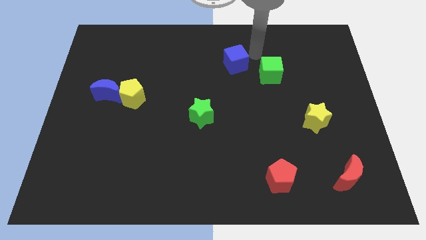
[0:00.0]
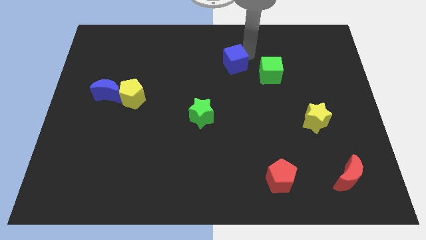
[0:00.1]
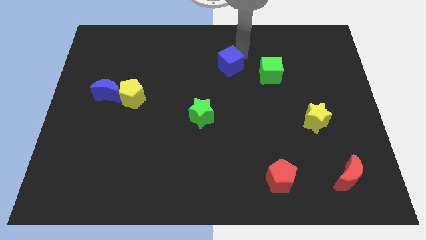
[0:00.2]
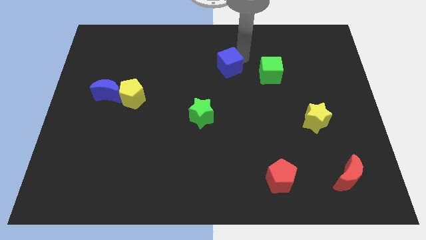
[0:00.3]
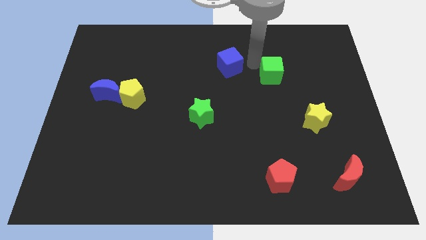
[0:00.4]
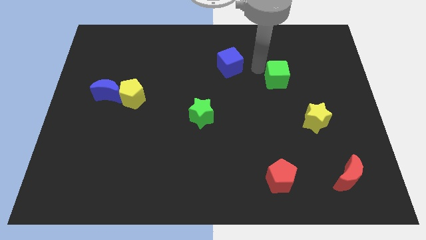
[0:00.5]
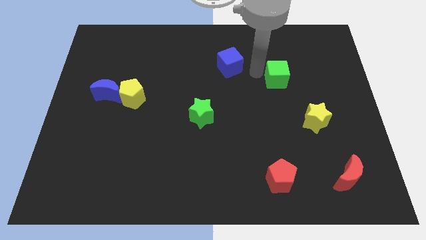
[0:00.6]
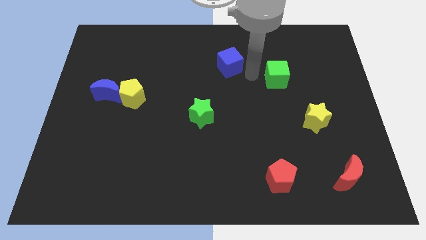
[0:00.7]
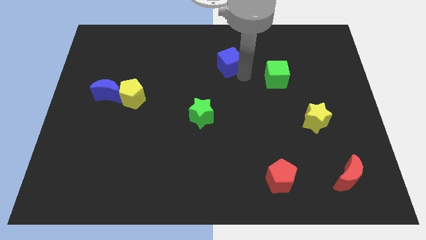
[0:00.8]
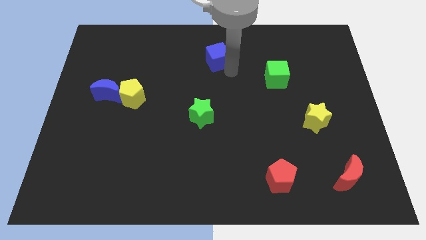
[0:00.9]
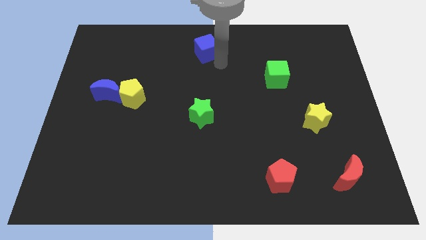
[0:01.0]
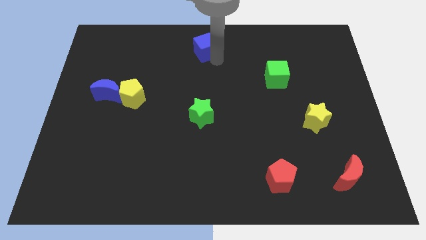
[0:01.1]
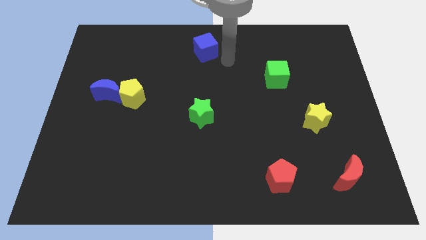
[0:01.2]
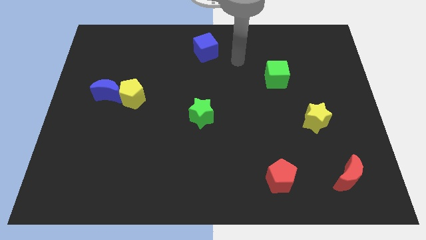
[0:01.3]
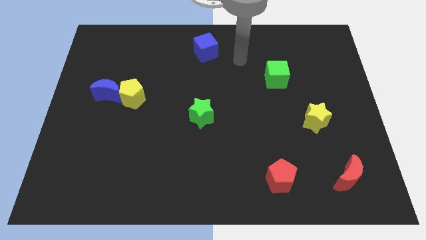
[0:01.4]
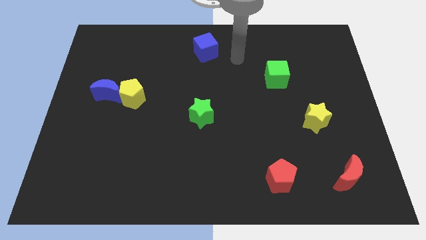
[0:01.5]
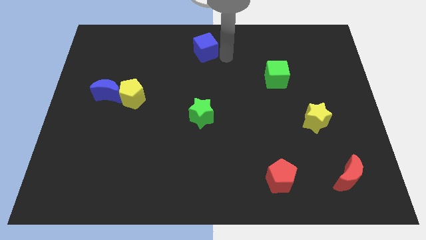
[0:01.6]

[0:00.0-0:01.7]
place the blue cube vertically above the green star

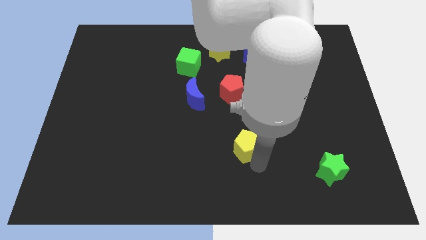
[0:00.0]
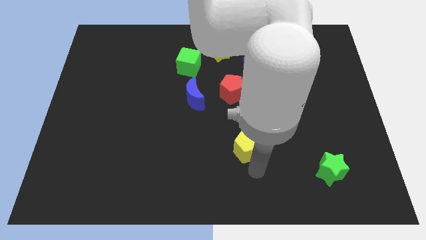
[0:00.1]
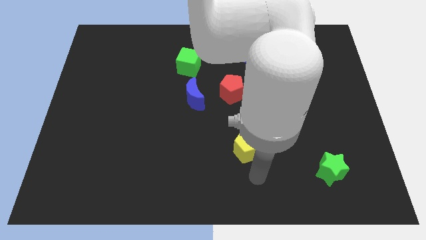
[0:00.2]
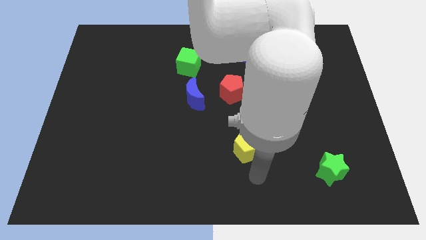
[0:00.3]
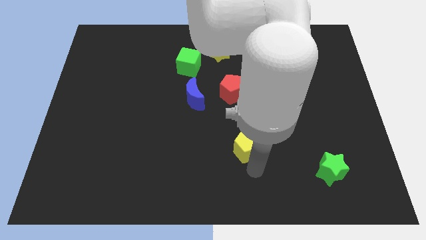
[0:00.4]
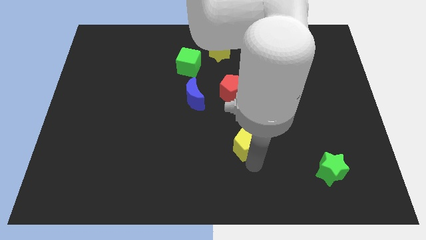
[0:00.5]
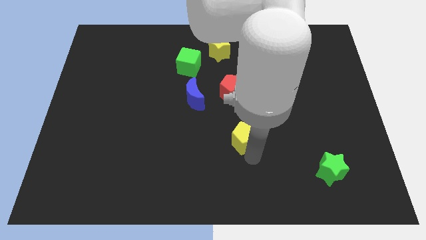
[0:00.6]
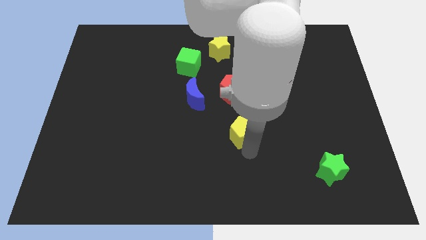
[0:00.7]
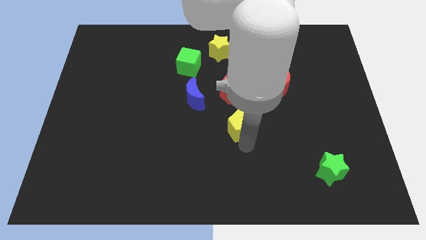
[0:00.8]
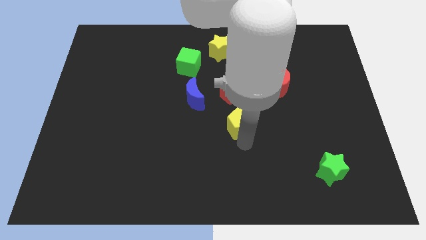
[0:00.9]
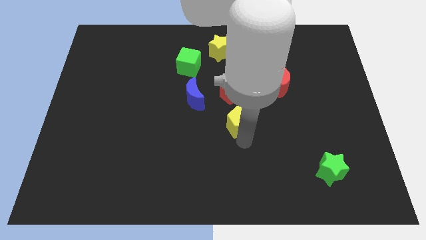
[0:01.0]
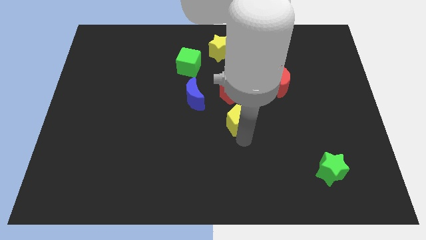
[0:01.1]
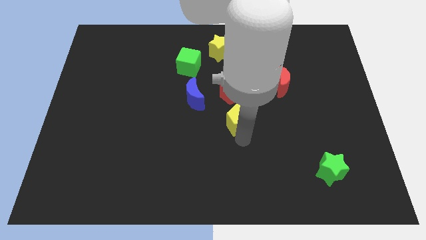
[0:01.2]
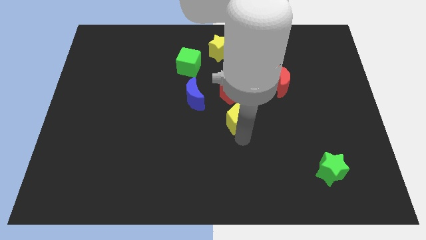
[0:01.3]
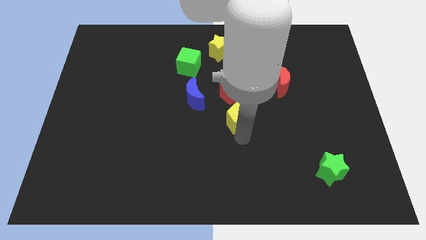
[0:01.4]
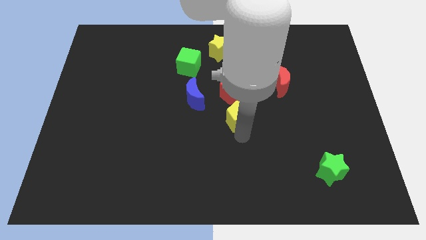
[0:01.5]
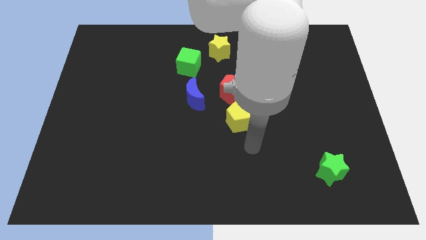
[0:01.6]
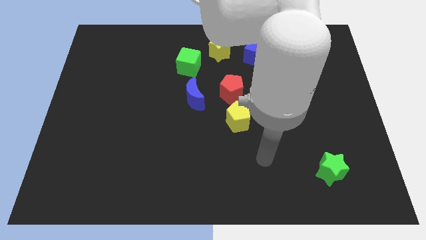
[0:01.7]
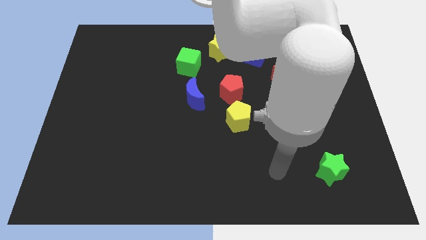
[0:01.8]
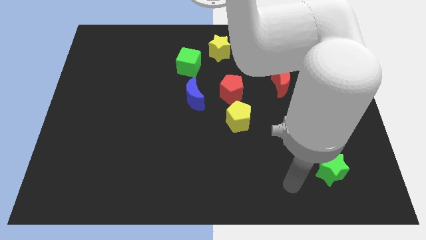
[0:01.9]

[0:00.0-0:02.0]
push yellow pentagon towards red pentagon

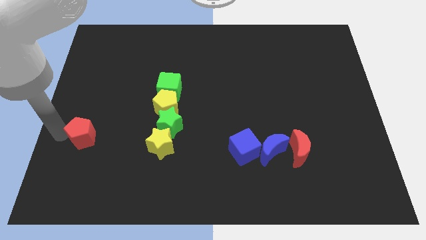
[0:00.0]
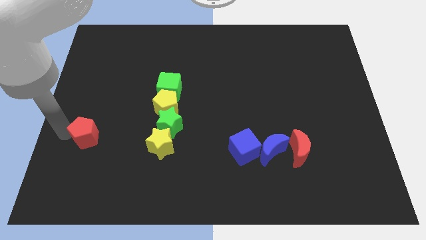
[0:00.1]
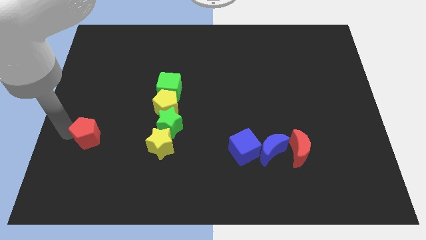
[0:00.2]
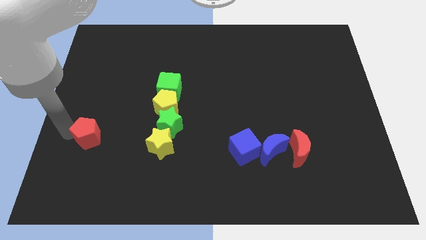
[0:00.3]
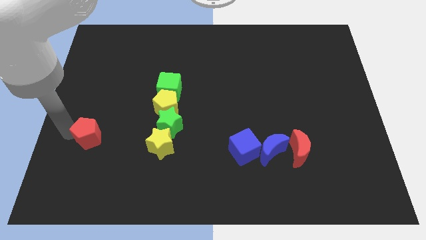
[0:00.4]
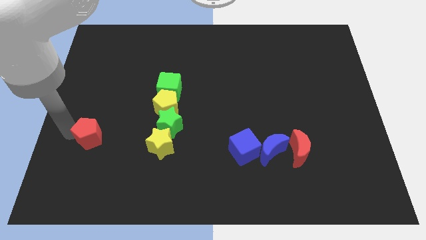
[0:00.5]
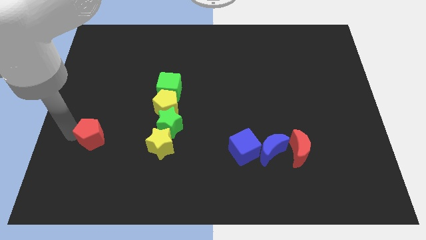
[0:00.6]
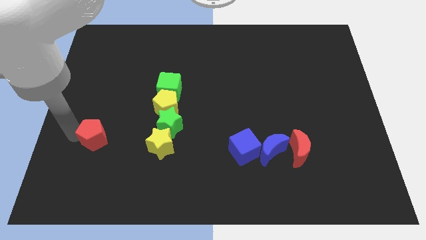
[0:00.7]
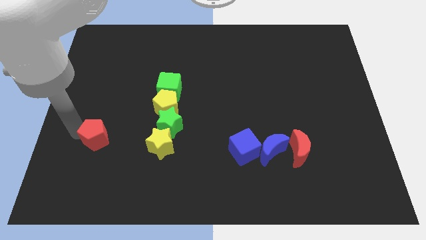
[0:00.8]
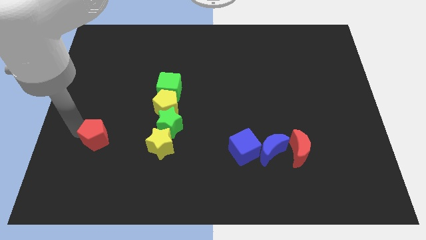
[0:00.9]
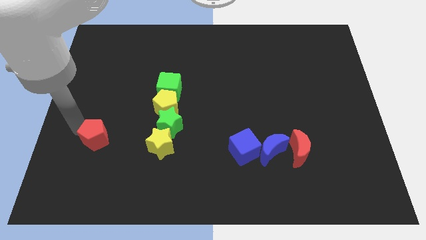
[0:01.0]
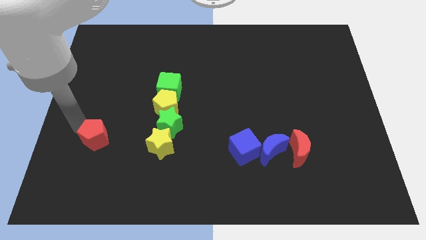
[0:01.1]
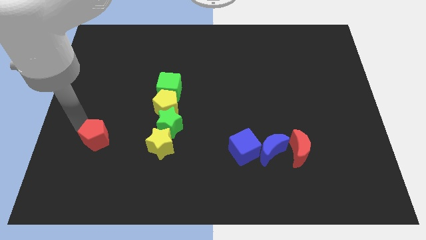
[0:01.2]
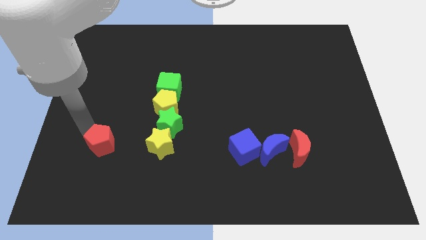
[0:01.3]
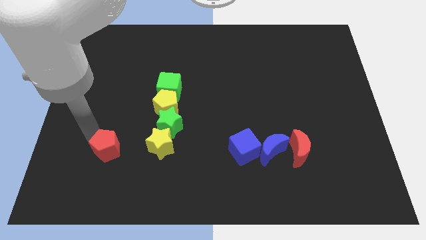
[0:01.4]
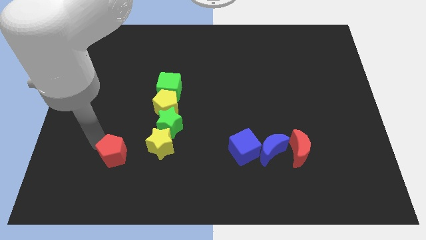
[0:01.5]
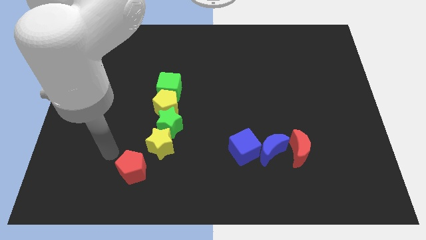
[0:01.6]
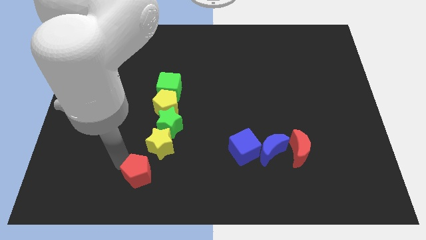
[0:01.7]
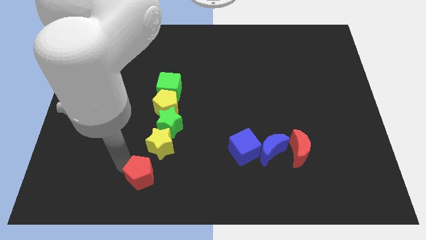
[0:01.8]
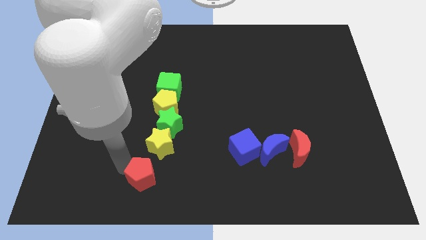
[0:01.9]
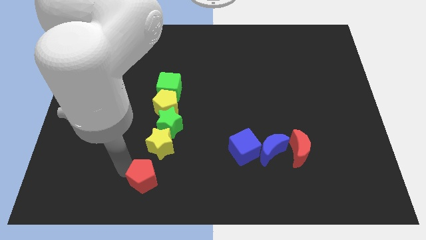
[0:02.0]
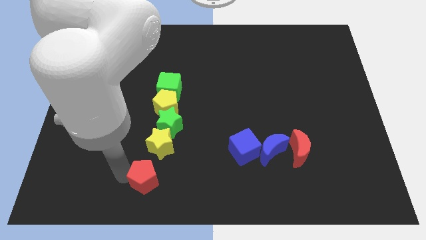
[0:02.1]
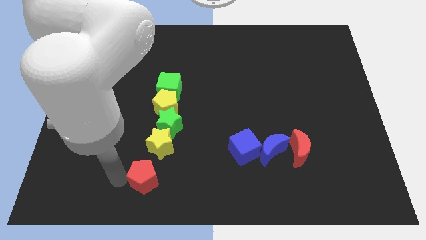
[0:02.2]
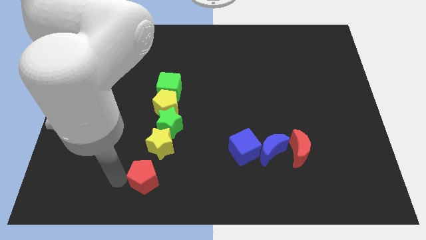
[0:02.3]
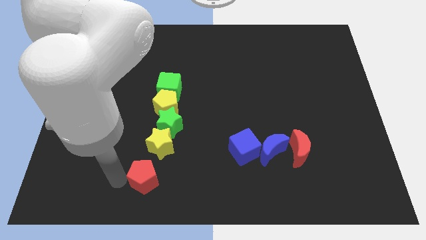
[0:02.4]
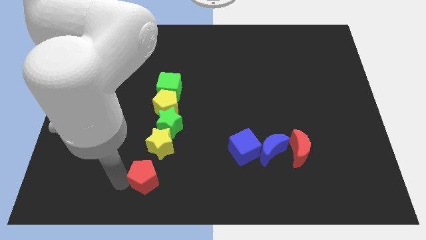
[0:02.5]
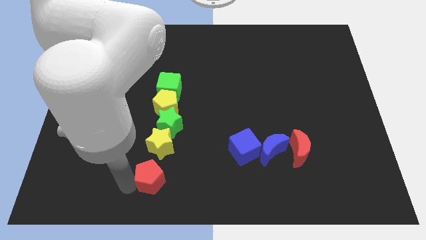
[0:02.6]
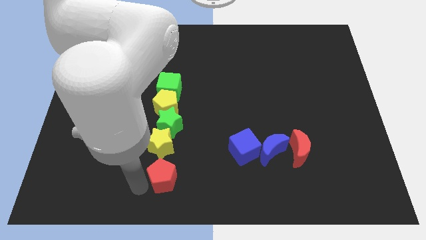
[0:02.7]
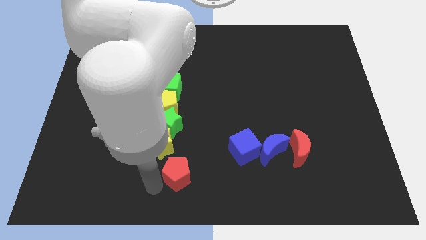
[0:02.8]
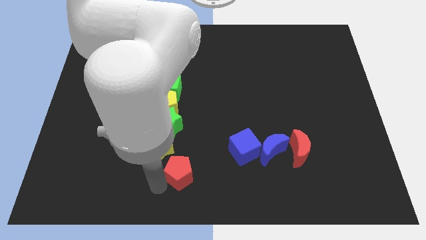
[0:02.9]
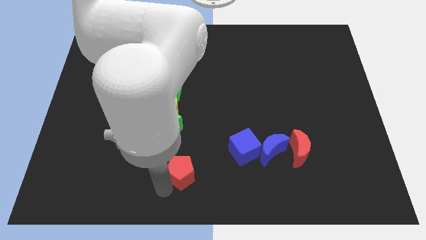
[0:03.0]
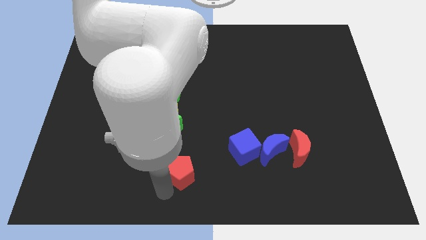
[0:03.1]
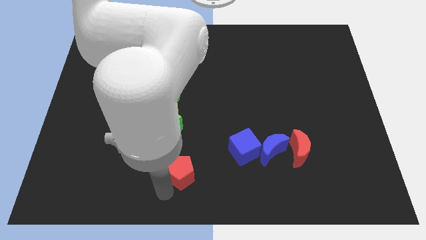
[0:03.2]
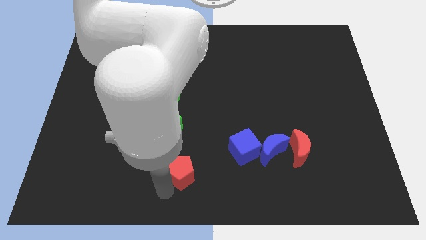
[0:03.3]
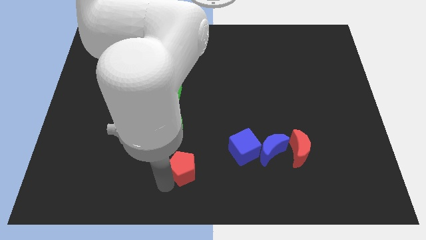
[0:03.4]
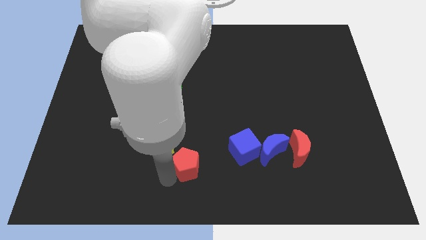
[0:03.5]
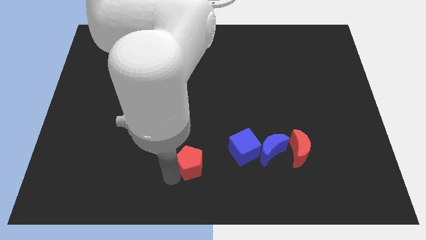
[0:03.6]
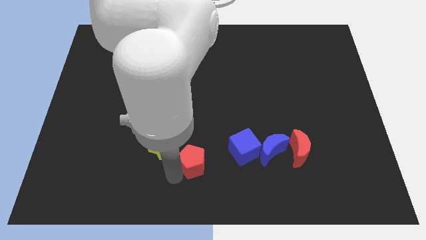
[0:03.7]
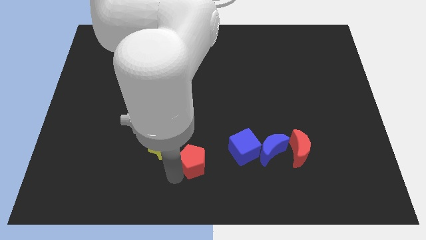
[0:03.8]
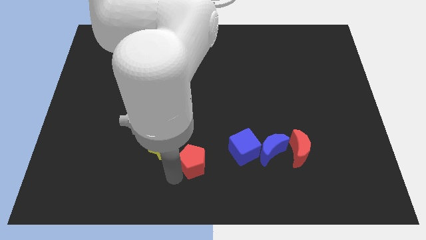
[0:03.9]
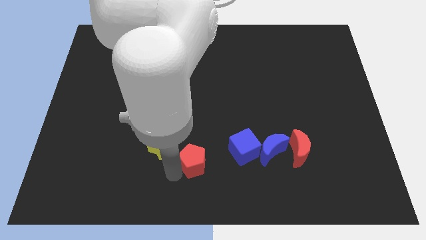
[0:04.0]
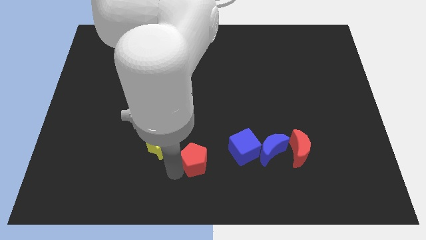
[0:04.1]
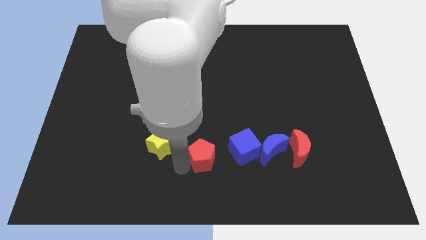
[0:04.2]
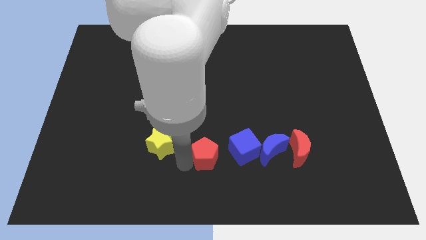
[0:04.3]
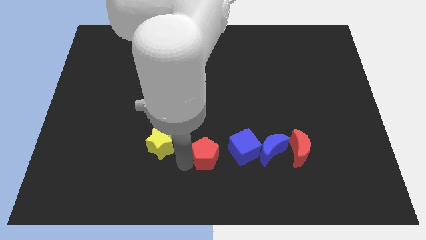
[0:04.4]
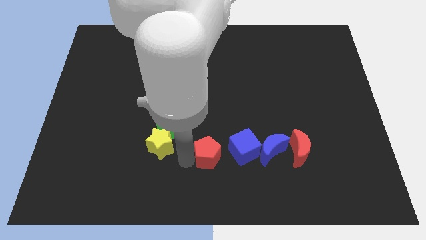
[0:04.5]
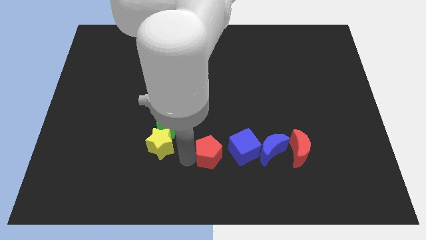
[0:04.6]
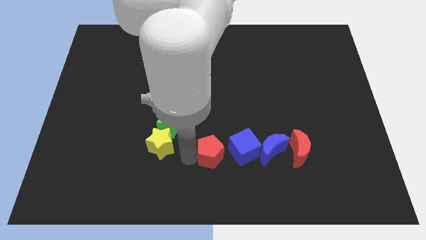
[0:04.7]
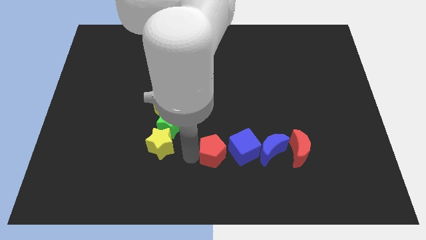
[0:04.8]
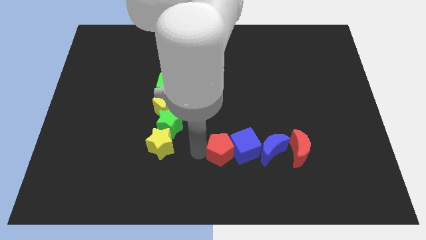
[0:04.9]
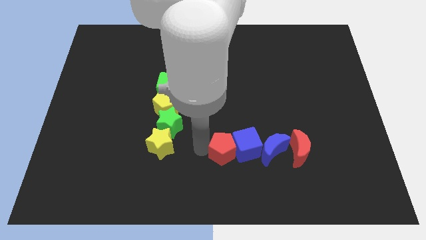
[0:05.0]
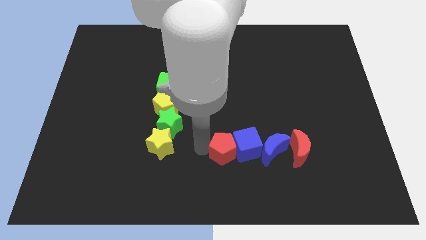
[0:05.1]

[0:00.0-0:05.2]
push the red pentagon left side of the blue cube
